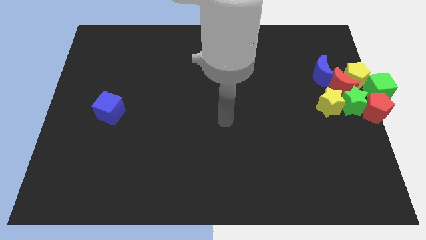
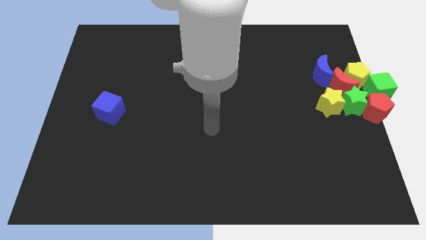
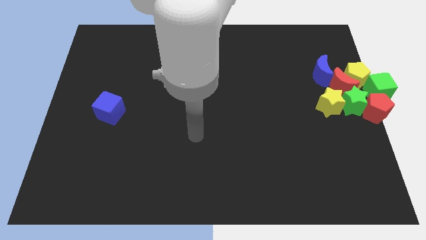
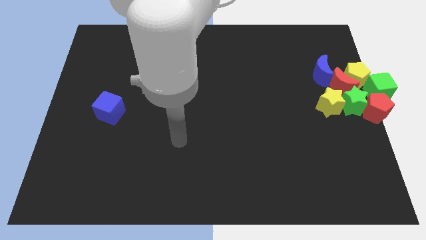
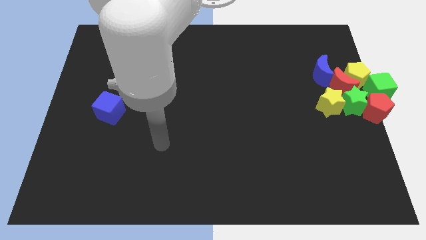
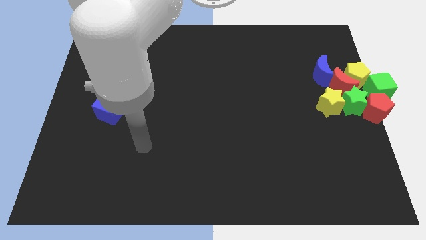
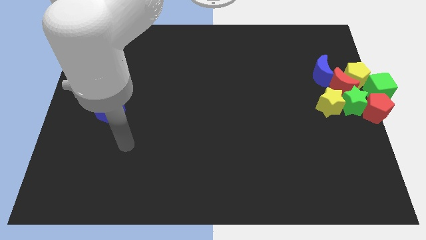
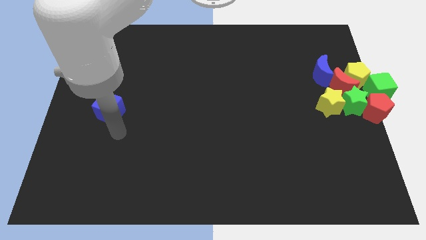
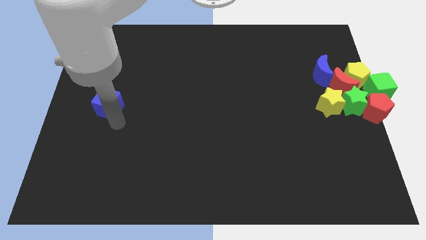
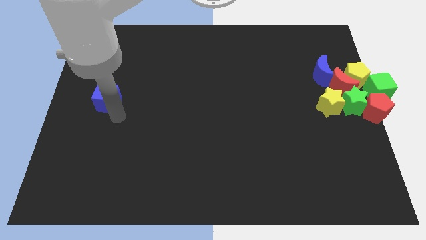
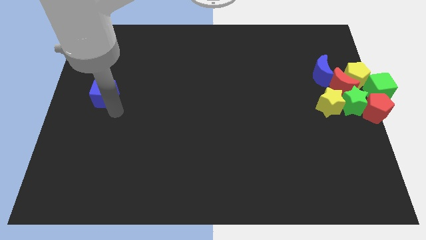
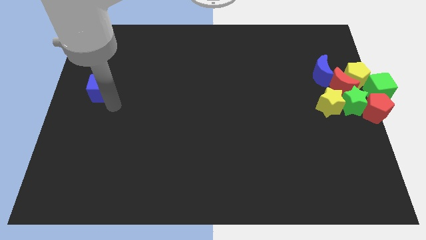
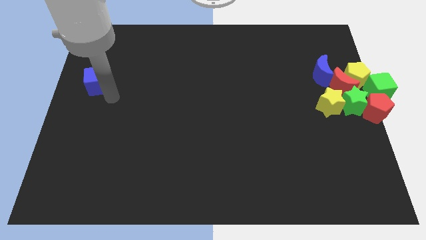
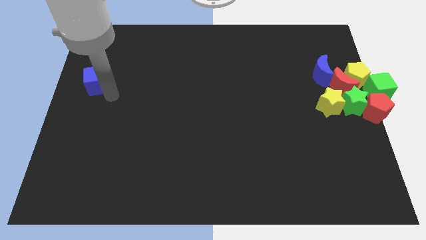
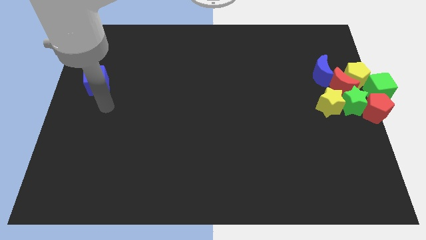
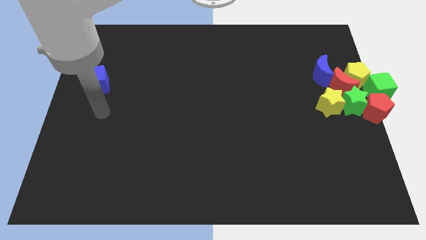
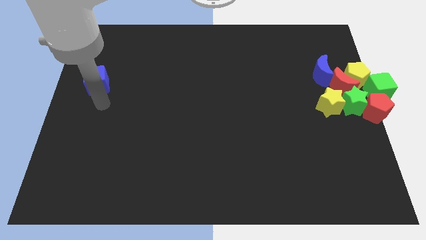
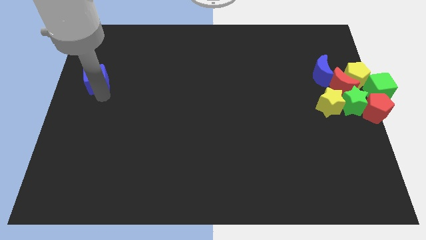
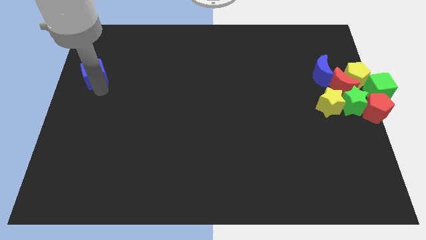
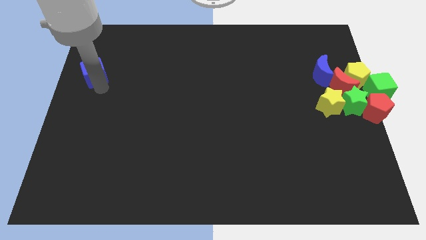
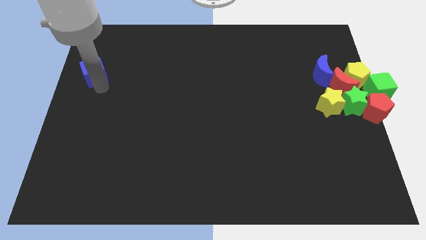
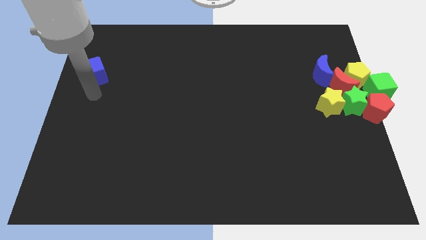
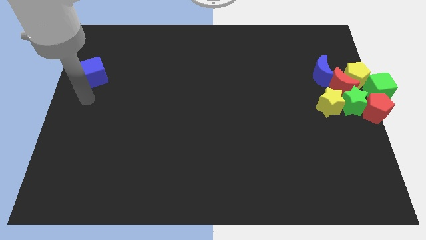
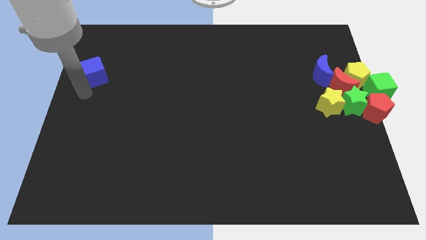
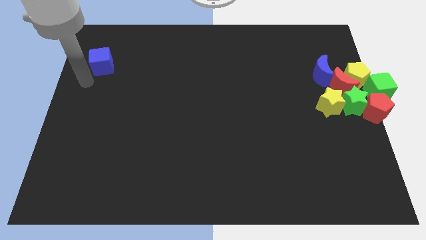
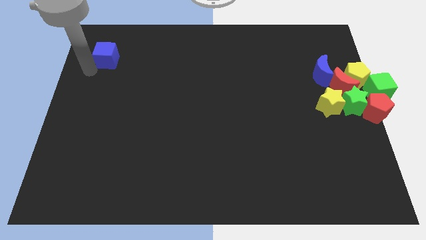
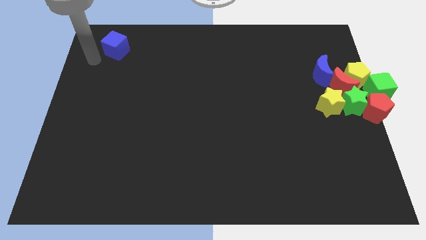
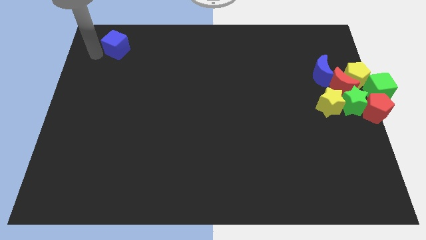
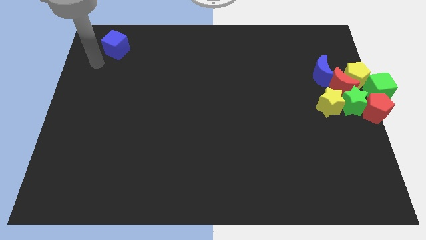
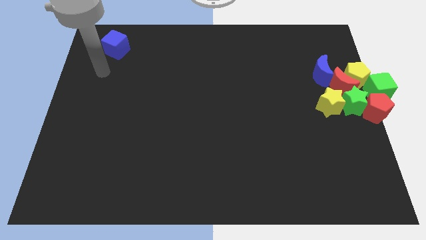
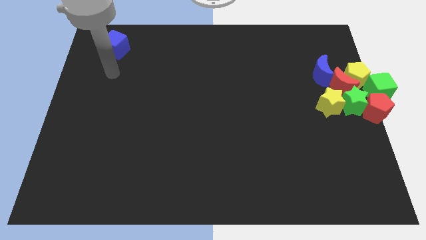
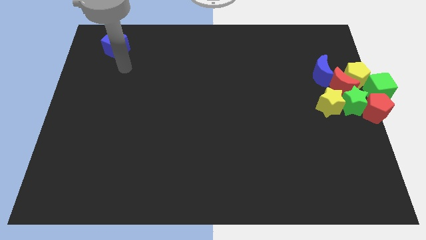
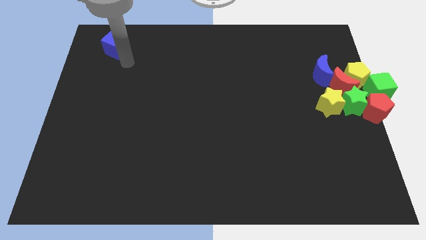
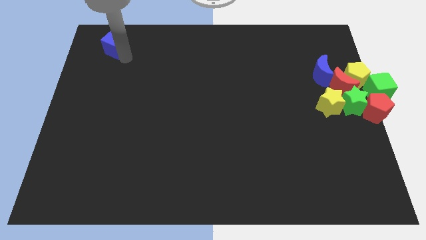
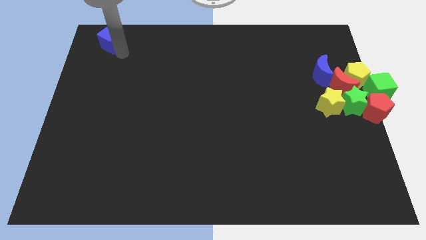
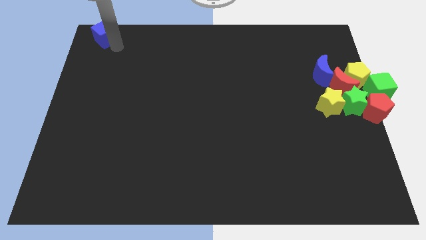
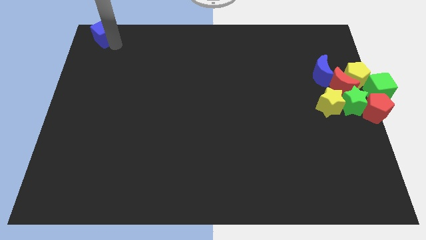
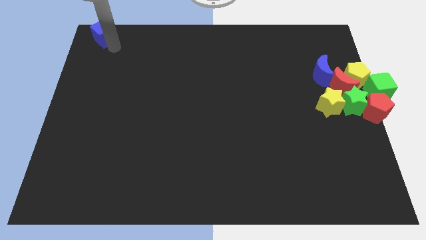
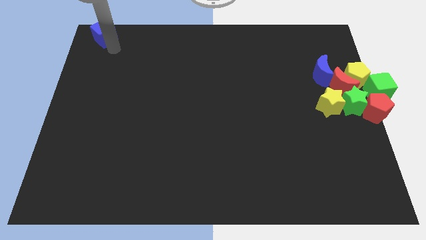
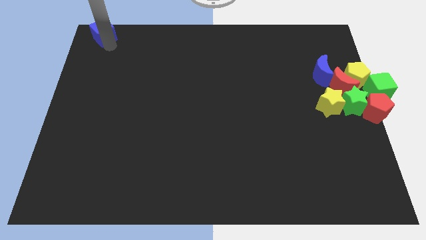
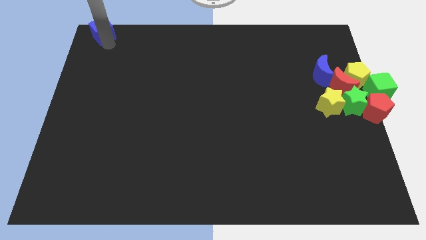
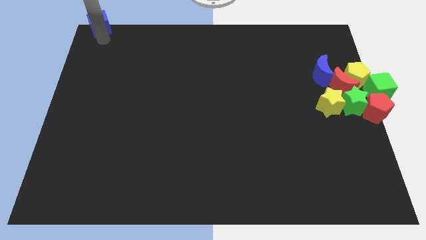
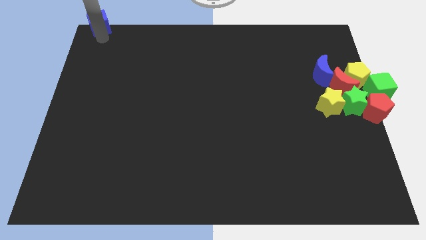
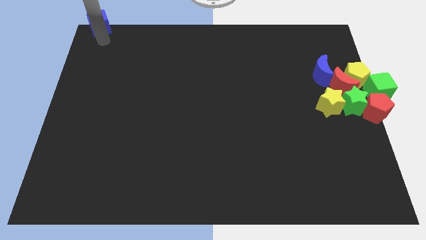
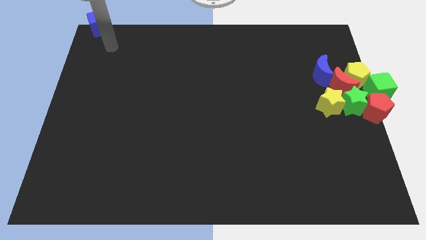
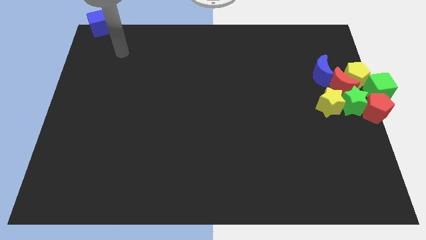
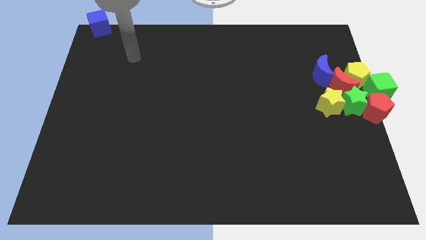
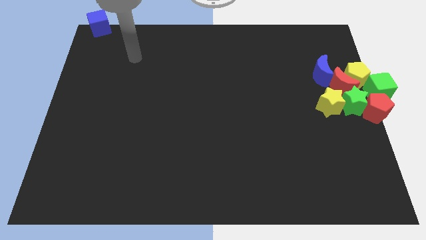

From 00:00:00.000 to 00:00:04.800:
slide the blue cube to the top left of the board

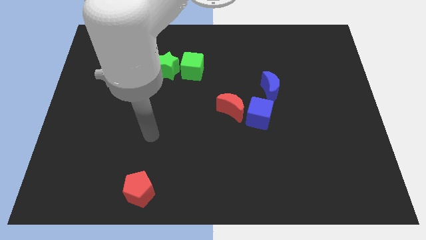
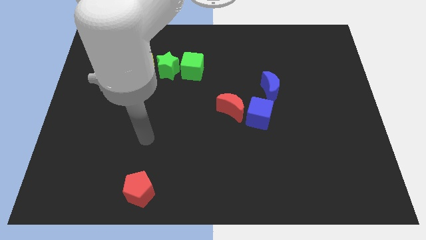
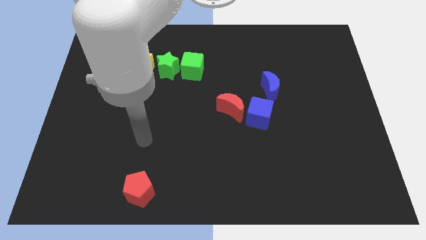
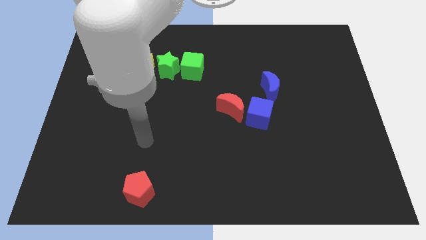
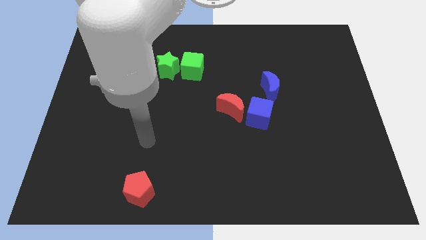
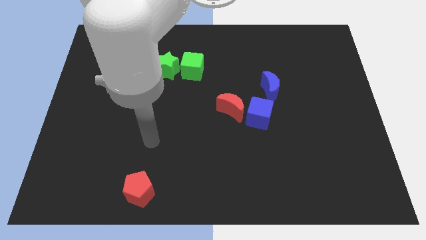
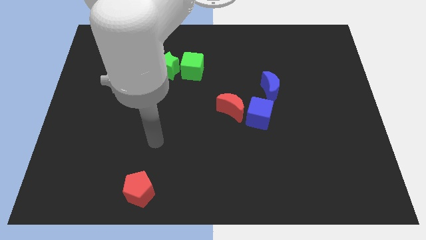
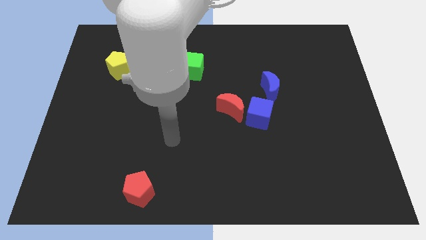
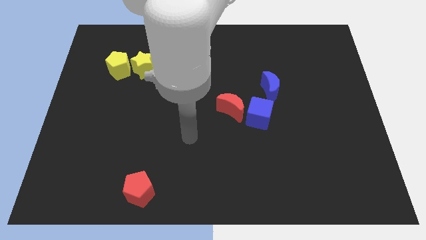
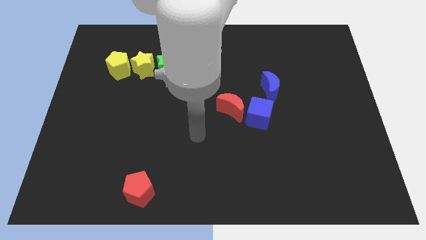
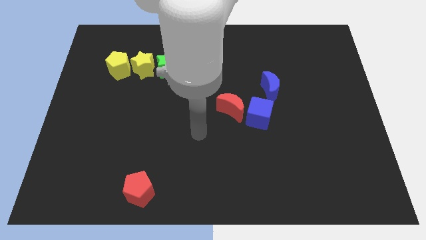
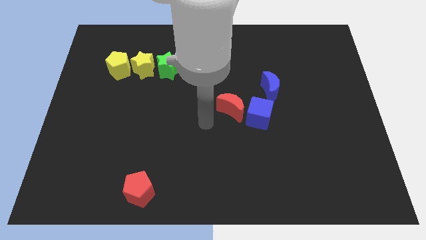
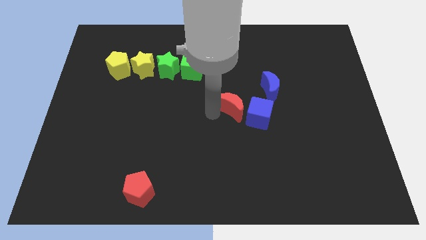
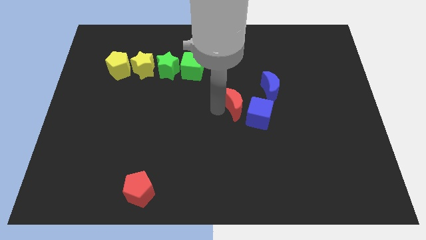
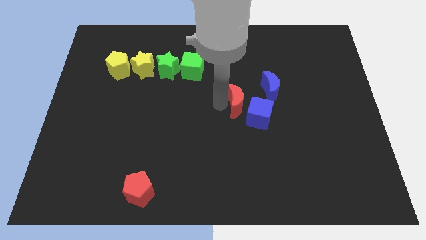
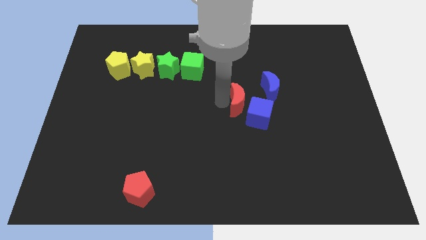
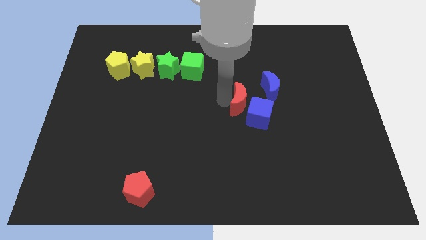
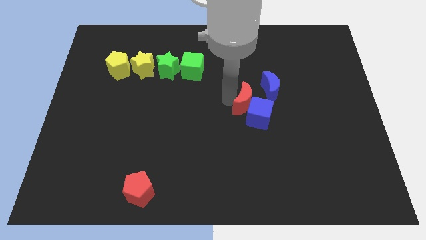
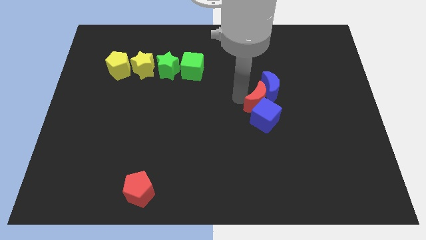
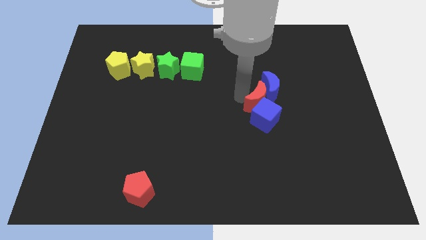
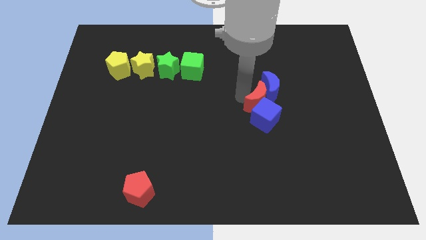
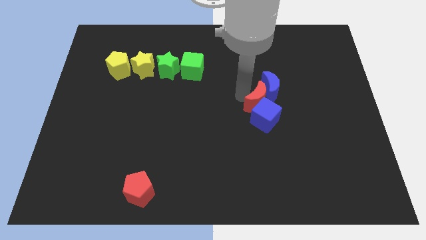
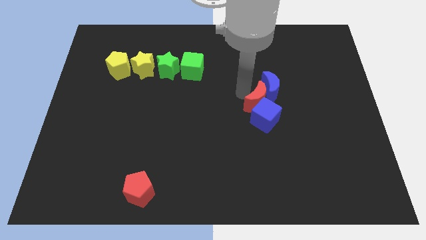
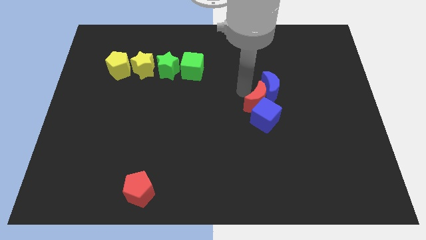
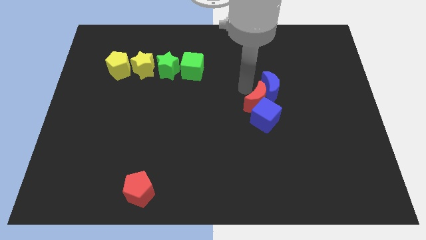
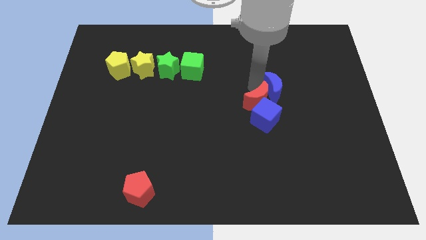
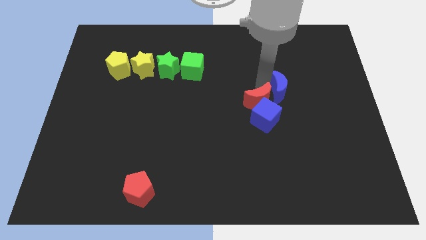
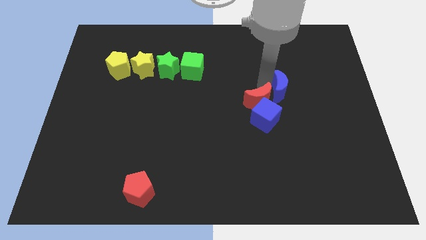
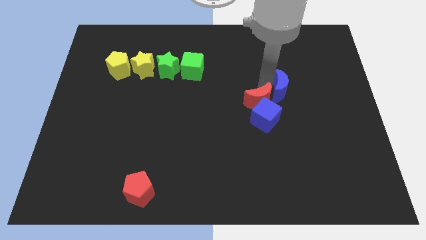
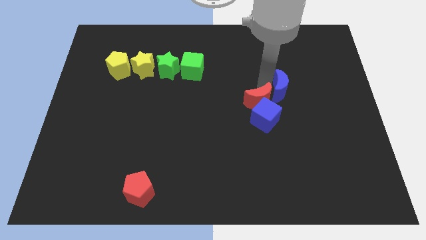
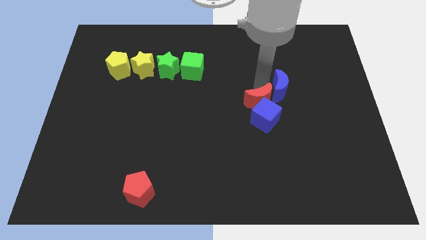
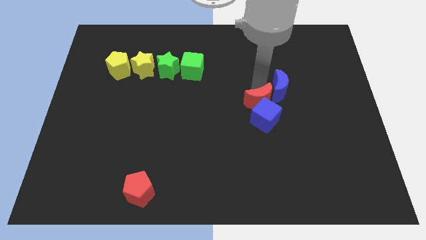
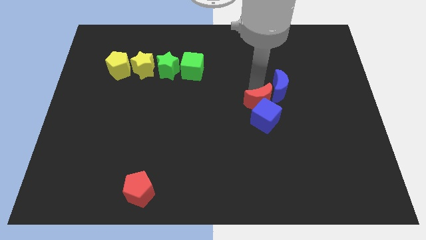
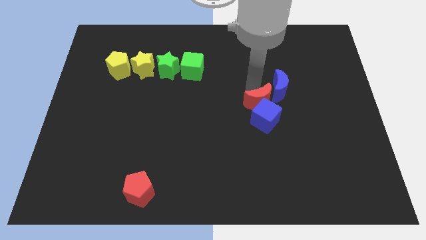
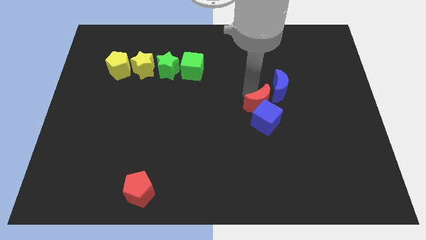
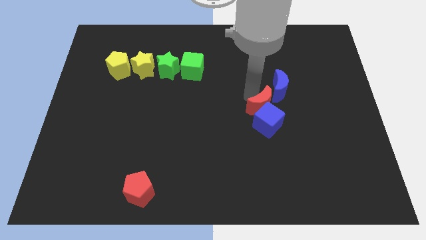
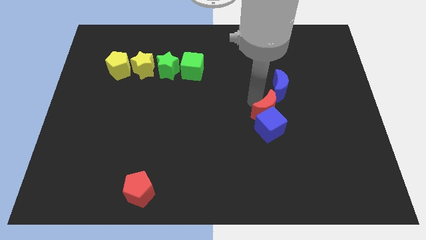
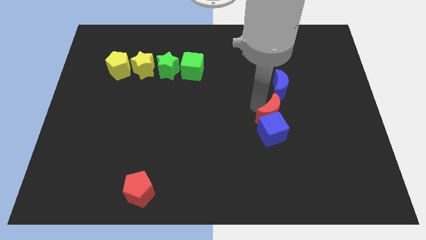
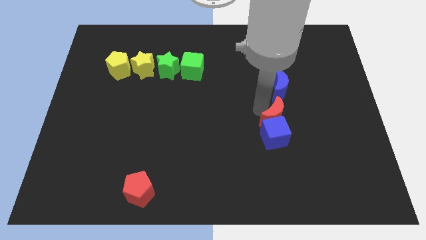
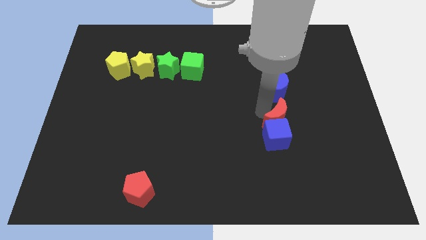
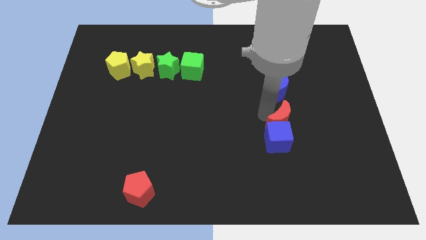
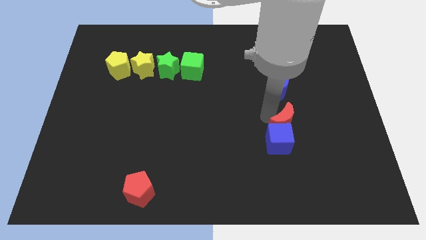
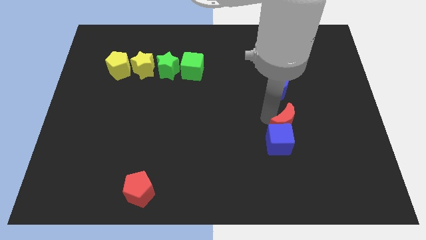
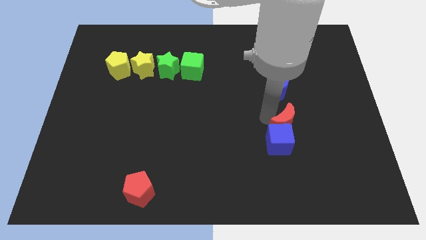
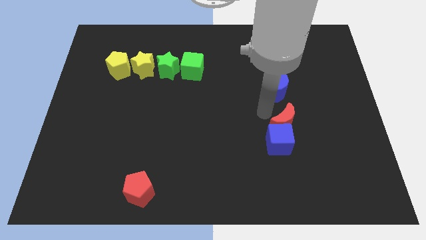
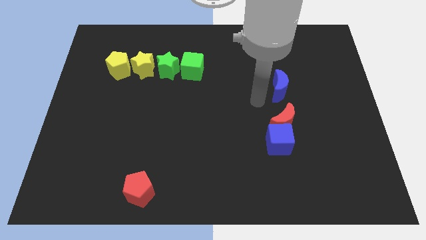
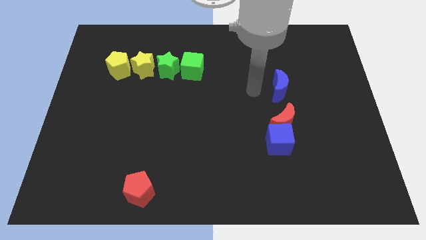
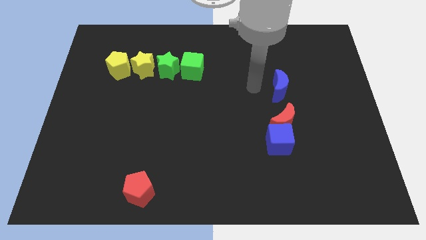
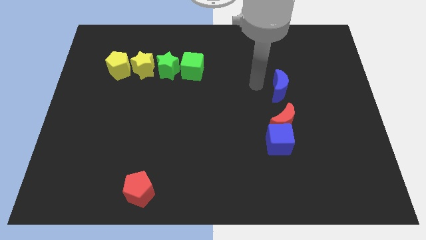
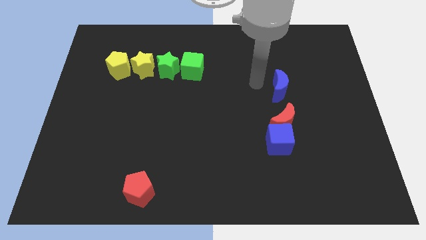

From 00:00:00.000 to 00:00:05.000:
move the red crescent into the blue cube
